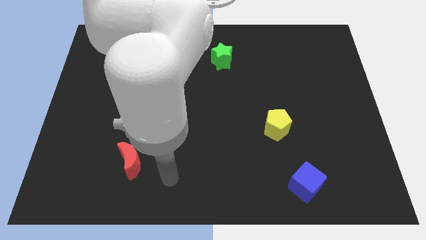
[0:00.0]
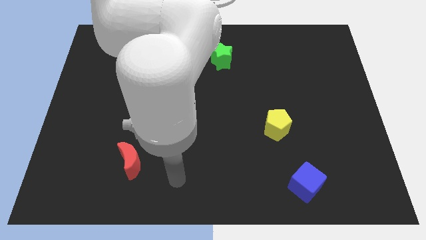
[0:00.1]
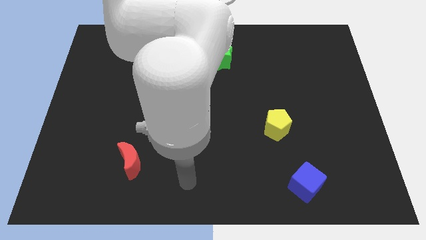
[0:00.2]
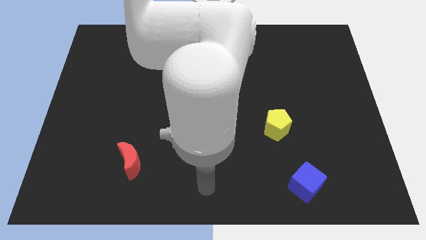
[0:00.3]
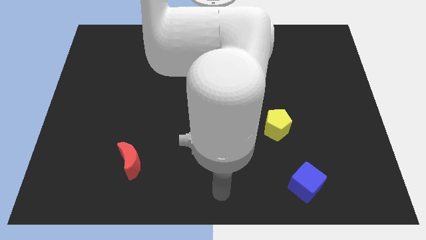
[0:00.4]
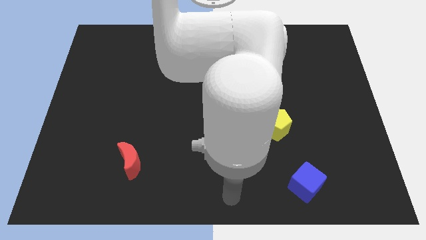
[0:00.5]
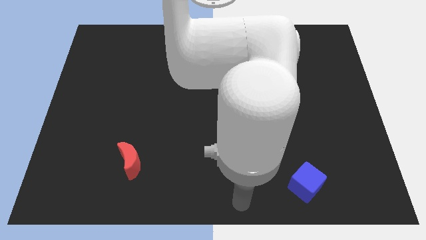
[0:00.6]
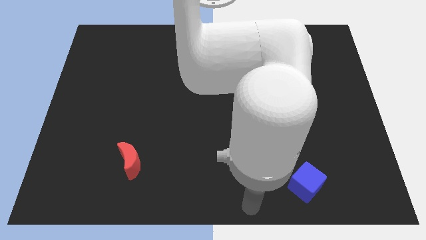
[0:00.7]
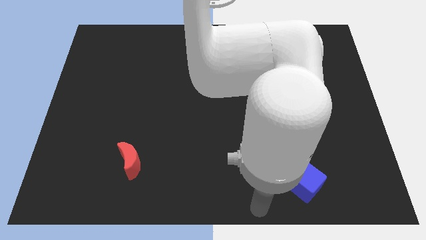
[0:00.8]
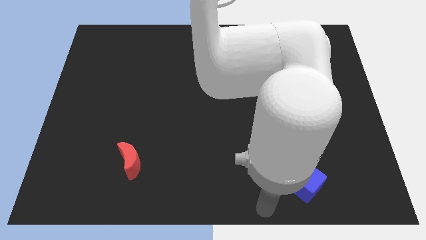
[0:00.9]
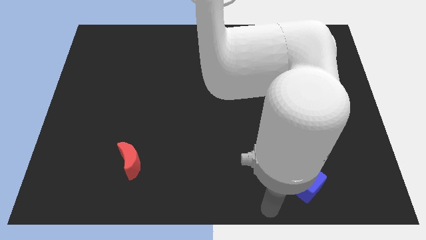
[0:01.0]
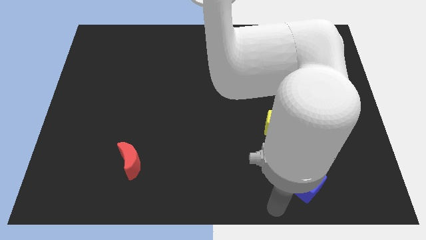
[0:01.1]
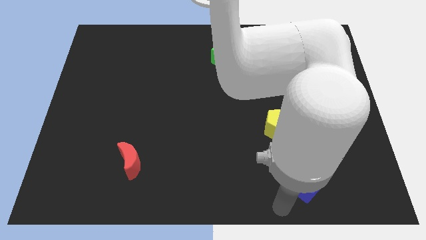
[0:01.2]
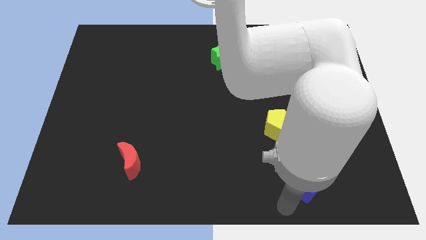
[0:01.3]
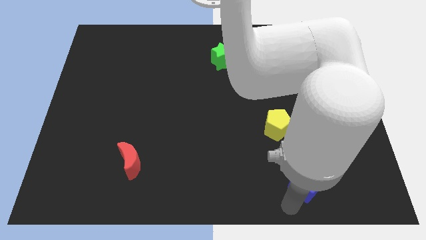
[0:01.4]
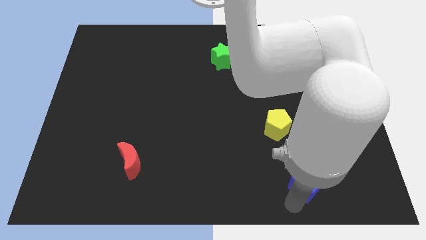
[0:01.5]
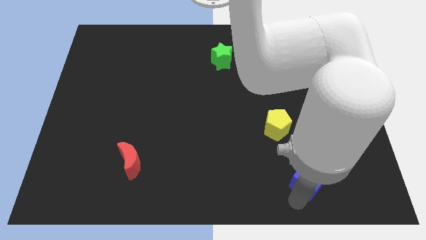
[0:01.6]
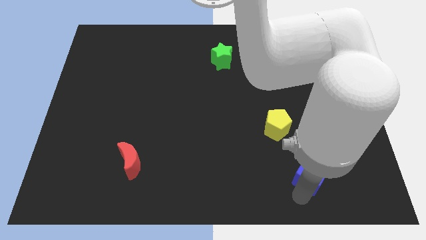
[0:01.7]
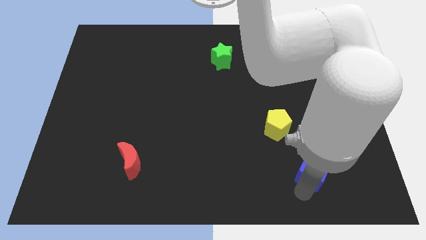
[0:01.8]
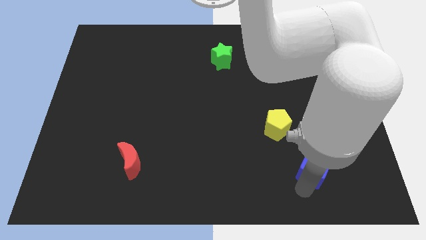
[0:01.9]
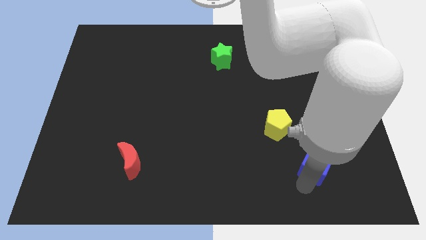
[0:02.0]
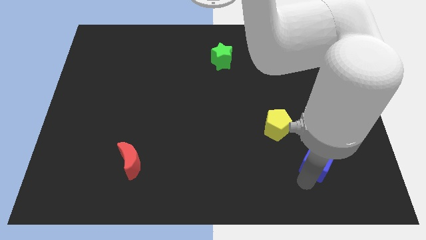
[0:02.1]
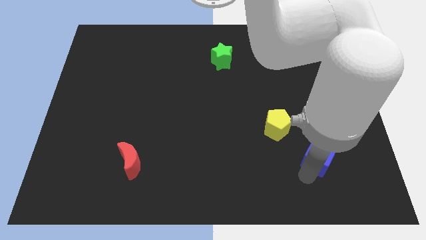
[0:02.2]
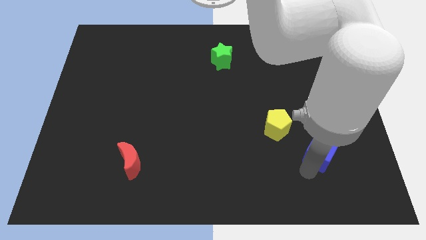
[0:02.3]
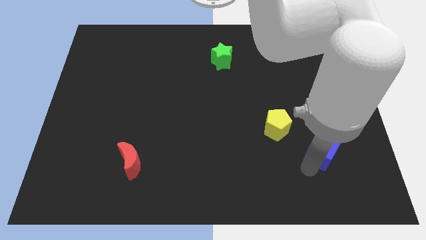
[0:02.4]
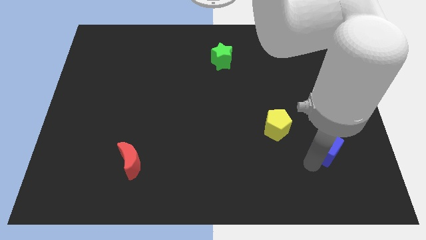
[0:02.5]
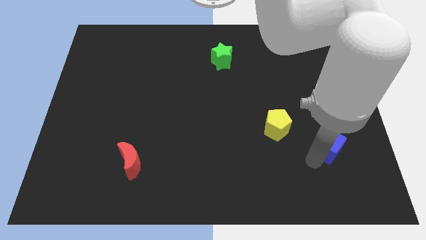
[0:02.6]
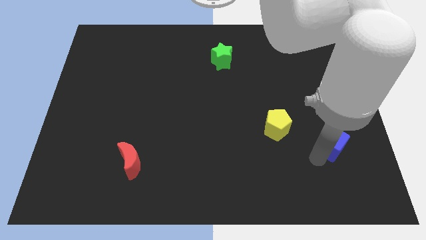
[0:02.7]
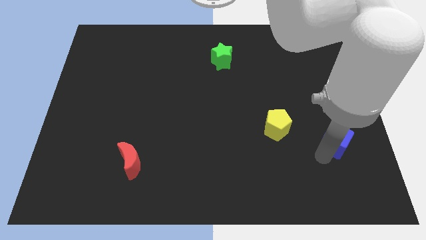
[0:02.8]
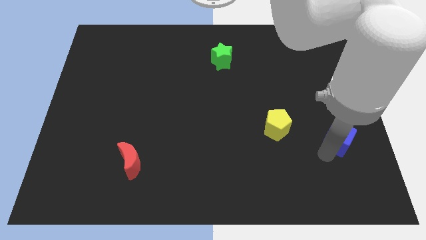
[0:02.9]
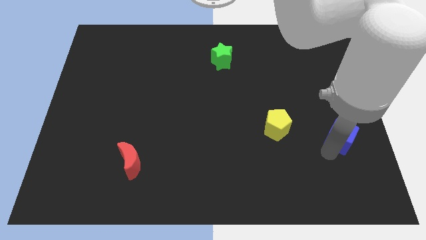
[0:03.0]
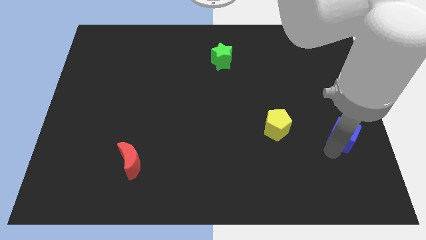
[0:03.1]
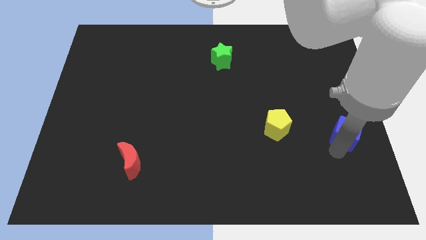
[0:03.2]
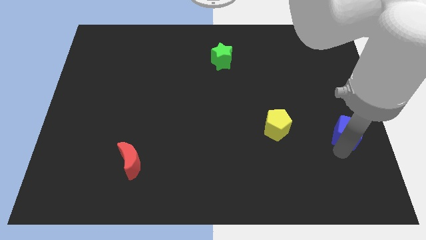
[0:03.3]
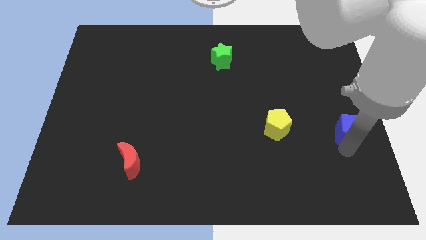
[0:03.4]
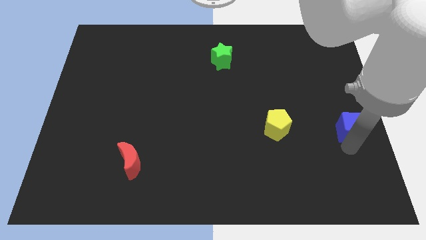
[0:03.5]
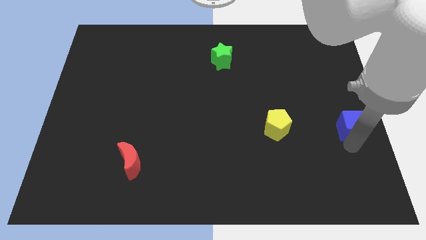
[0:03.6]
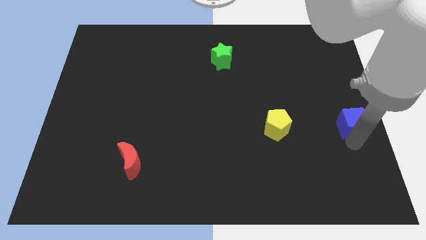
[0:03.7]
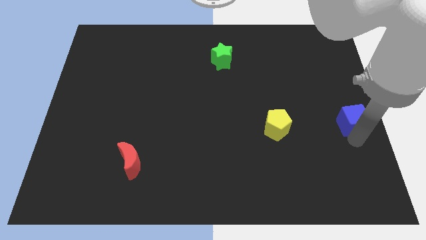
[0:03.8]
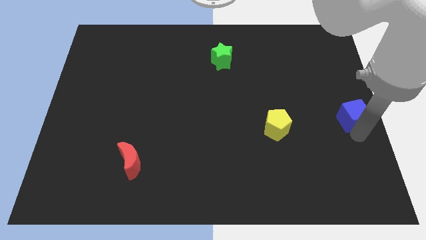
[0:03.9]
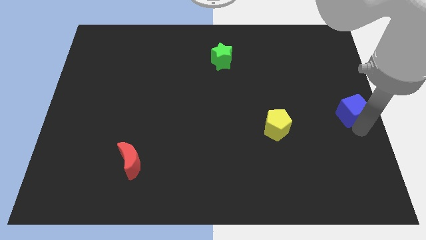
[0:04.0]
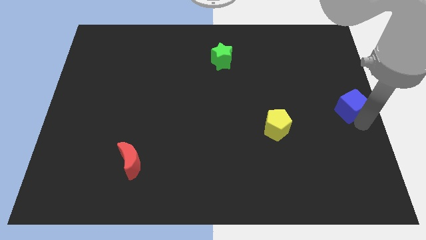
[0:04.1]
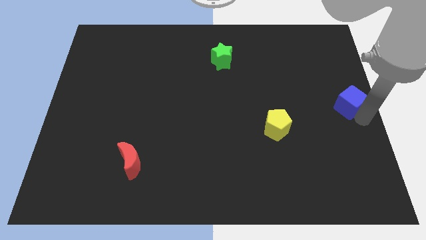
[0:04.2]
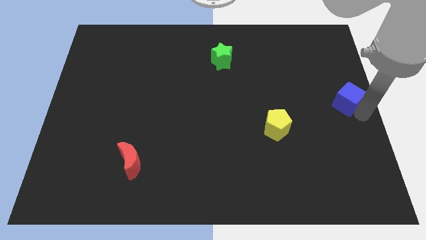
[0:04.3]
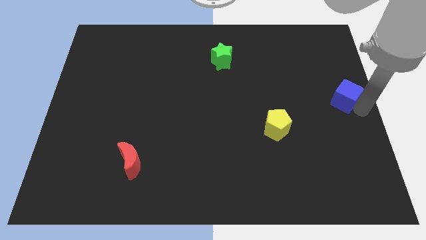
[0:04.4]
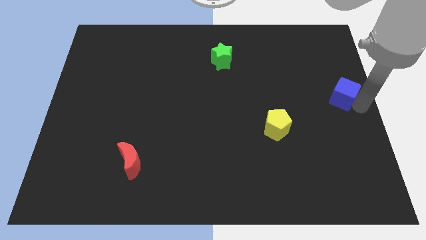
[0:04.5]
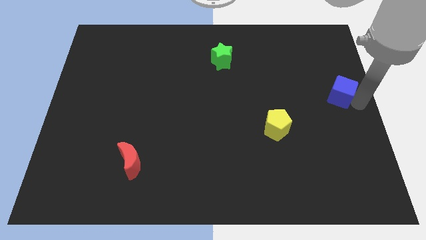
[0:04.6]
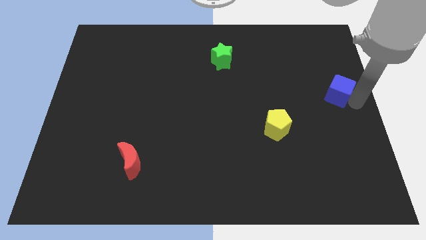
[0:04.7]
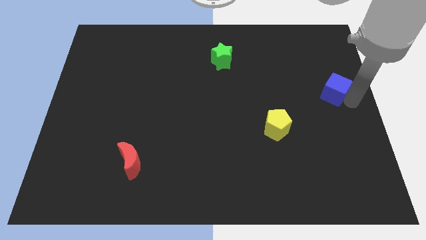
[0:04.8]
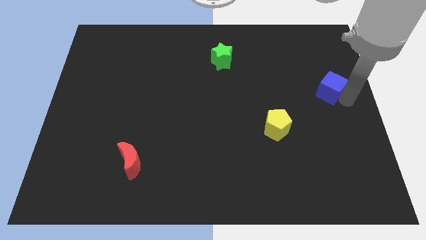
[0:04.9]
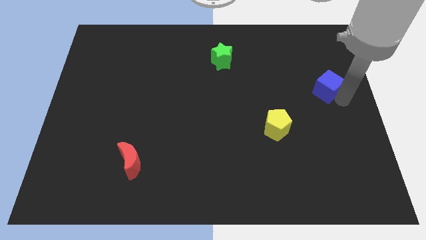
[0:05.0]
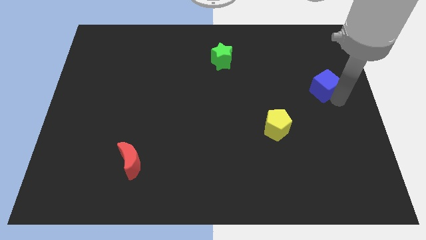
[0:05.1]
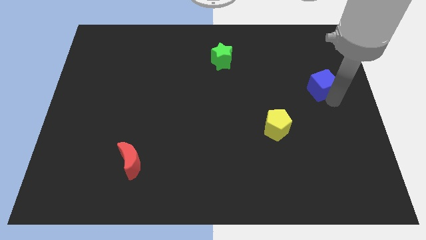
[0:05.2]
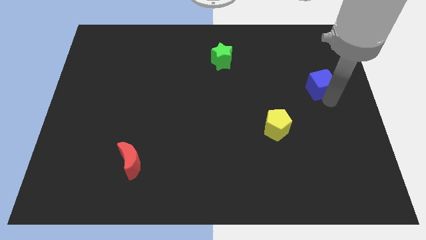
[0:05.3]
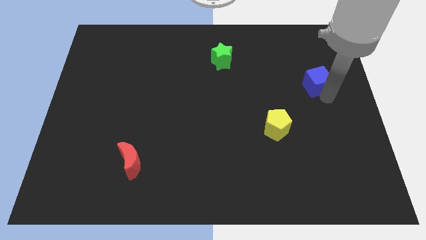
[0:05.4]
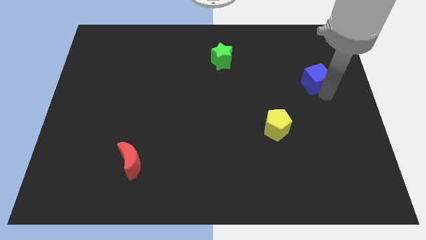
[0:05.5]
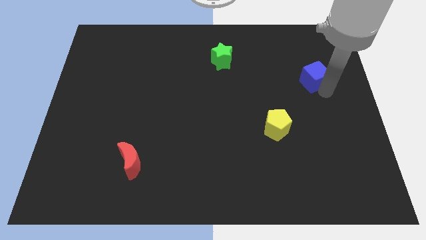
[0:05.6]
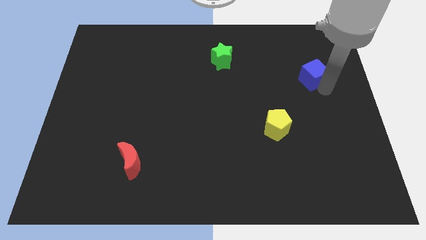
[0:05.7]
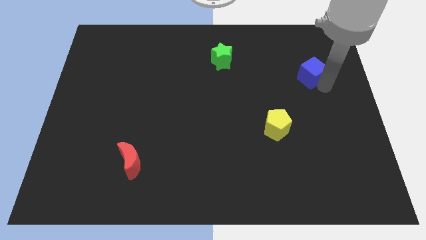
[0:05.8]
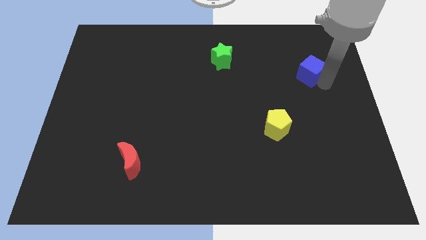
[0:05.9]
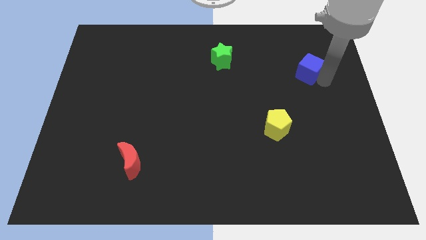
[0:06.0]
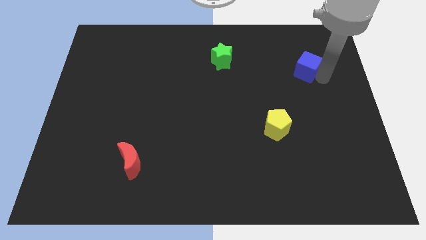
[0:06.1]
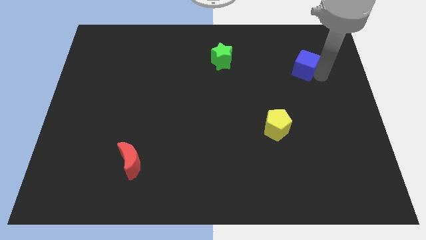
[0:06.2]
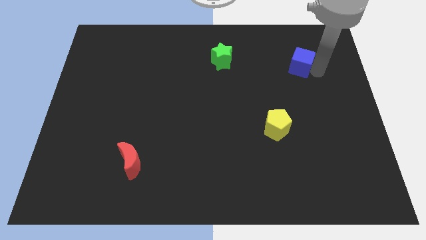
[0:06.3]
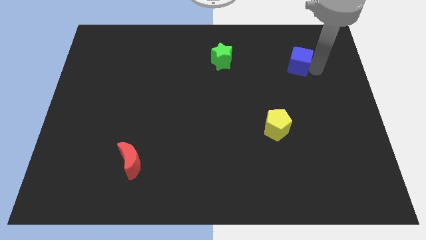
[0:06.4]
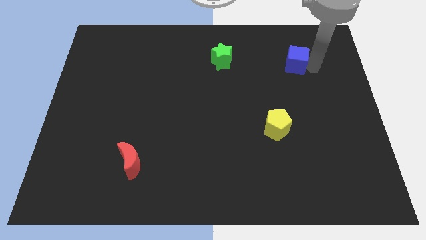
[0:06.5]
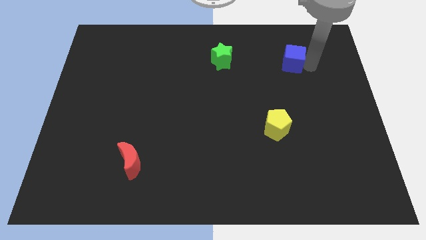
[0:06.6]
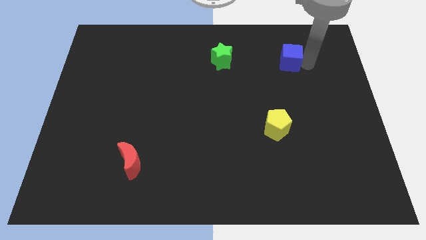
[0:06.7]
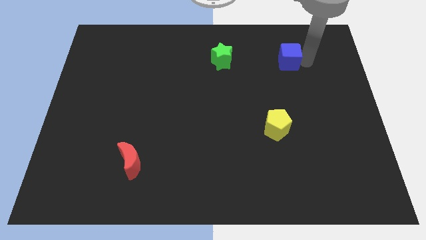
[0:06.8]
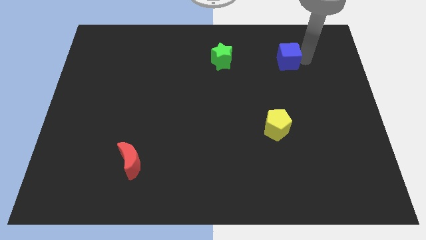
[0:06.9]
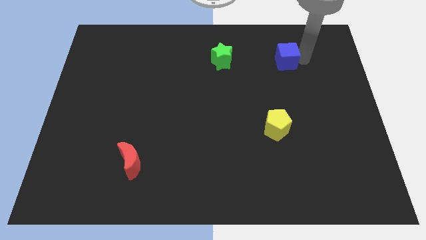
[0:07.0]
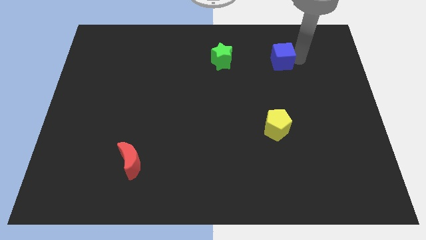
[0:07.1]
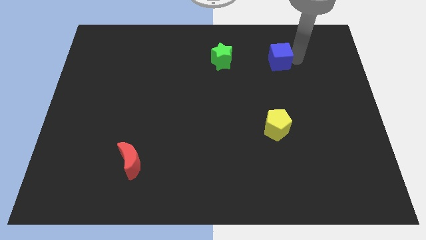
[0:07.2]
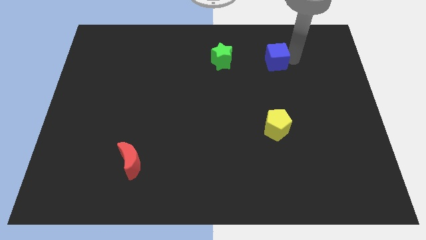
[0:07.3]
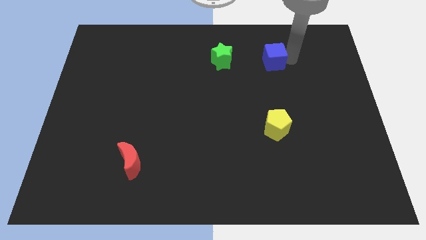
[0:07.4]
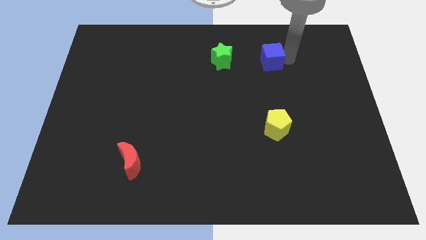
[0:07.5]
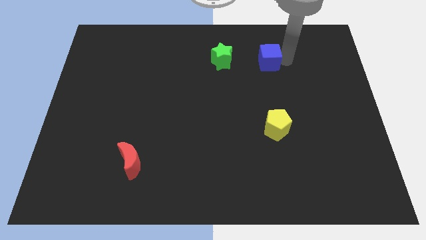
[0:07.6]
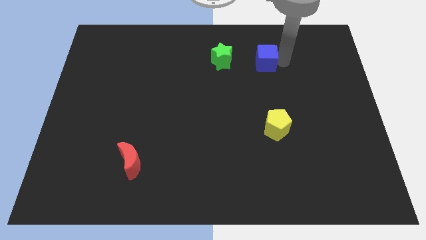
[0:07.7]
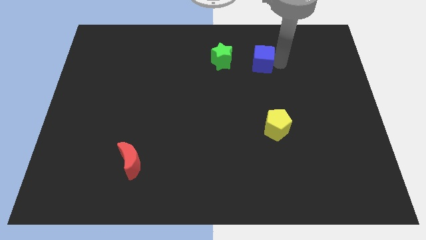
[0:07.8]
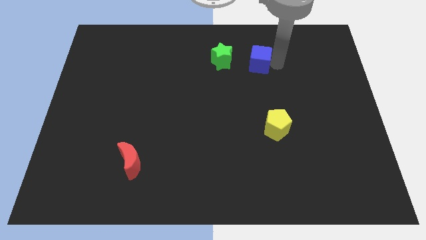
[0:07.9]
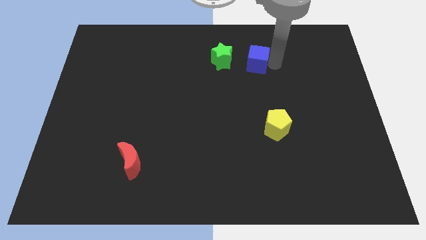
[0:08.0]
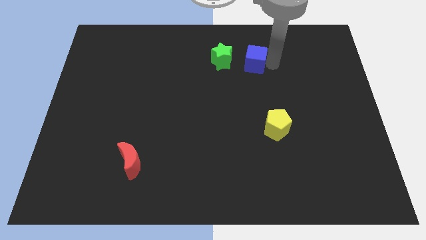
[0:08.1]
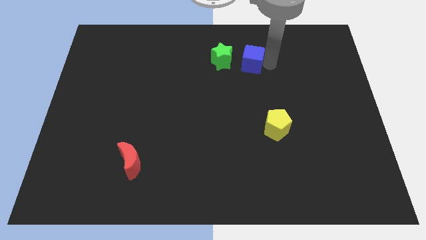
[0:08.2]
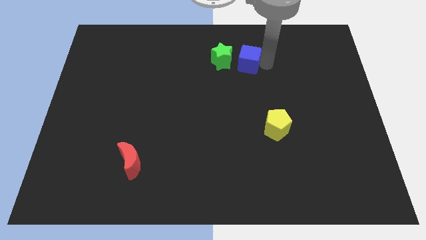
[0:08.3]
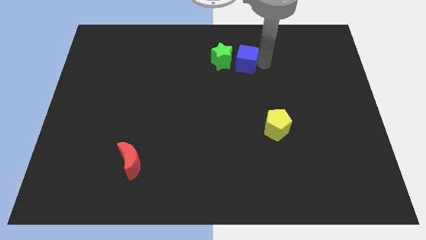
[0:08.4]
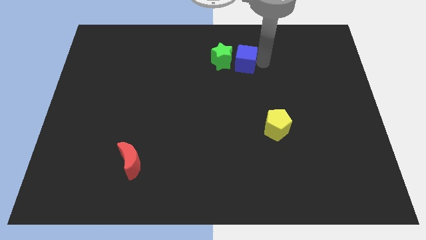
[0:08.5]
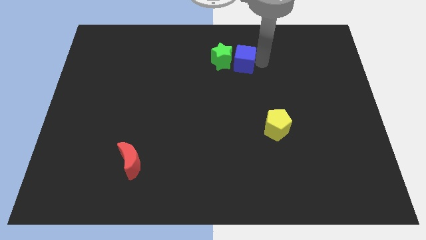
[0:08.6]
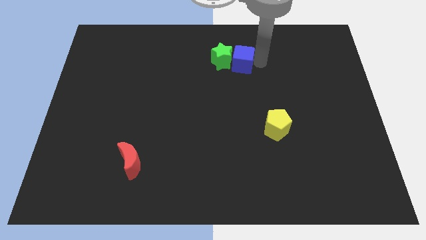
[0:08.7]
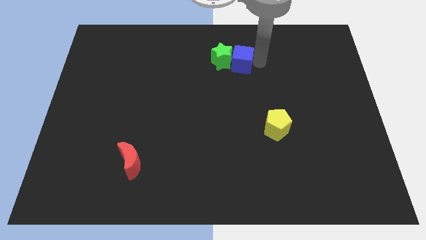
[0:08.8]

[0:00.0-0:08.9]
push the blue cube close to the star
